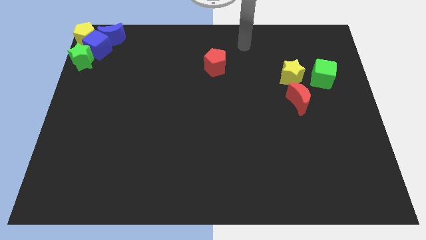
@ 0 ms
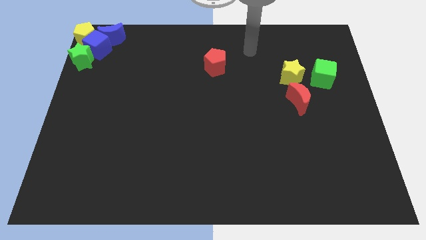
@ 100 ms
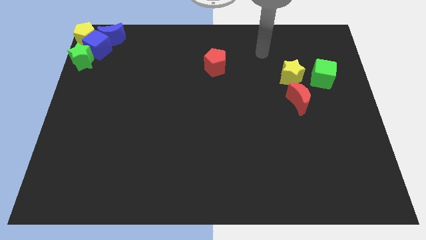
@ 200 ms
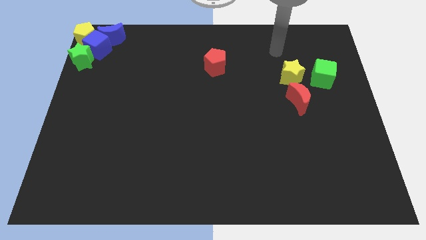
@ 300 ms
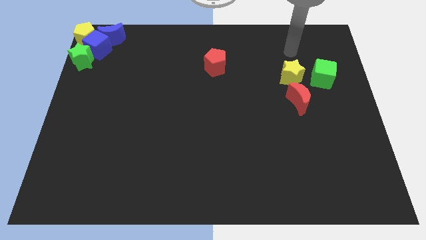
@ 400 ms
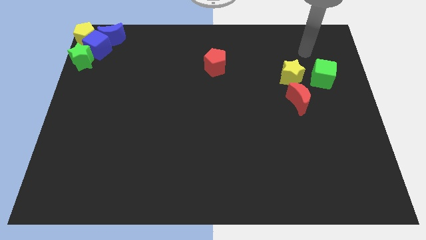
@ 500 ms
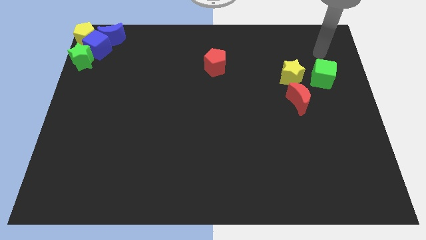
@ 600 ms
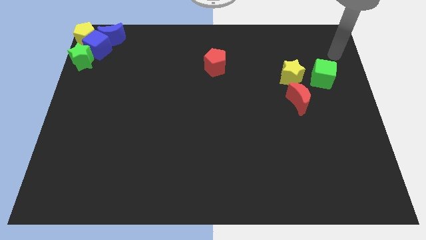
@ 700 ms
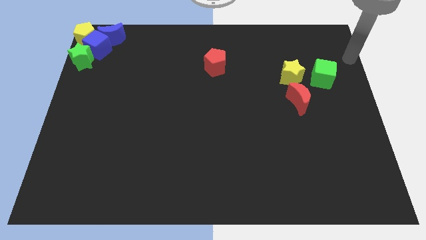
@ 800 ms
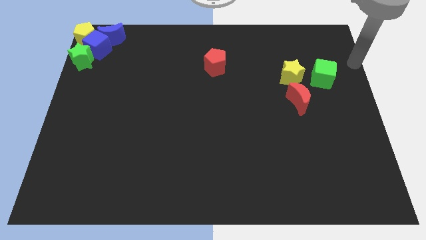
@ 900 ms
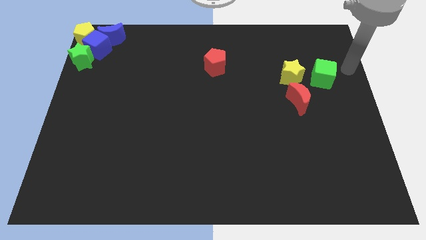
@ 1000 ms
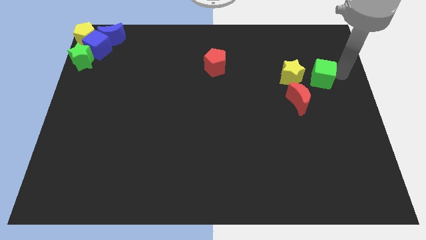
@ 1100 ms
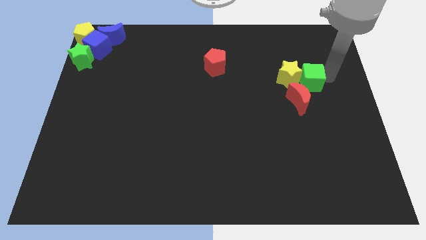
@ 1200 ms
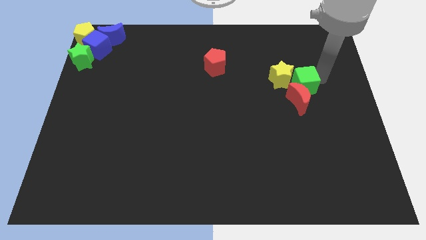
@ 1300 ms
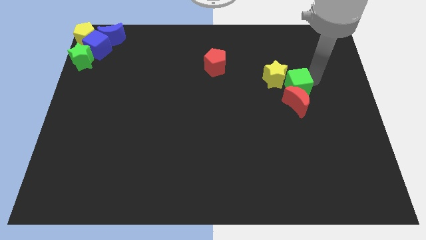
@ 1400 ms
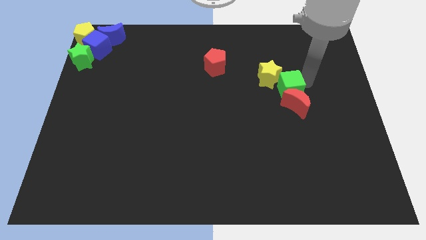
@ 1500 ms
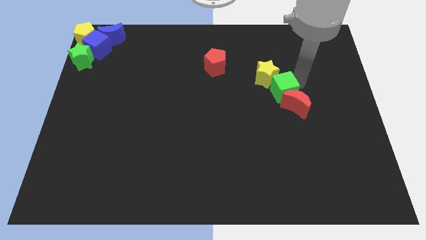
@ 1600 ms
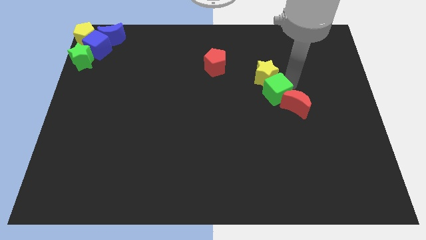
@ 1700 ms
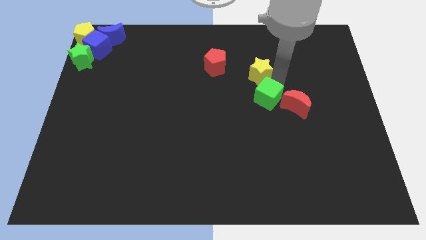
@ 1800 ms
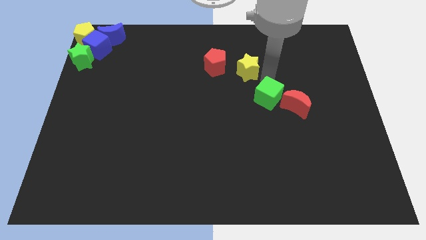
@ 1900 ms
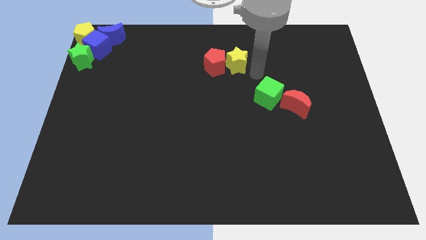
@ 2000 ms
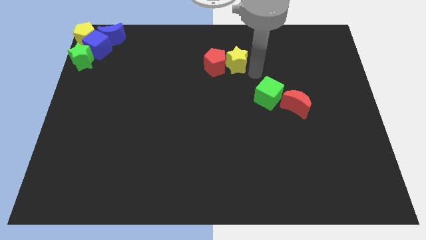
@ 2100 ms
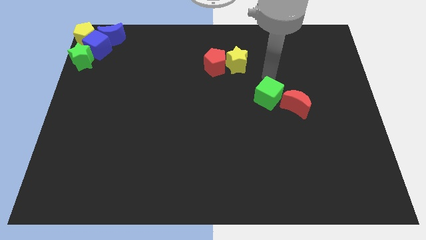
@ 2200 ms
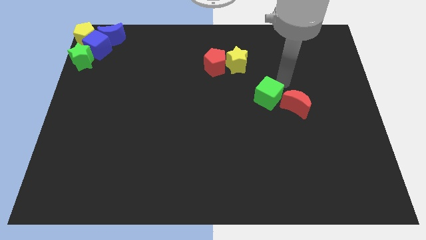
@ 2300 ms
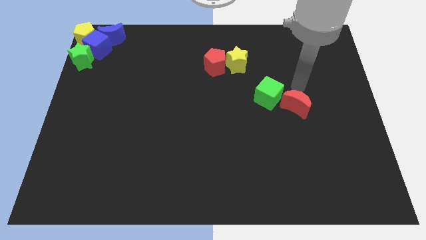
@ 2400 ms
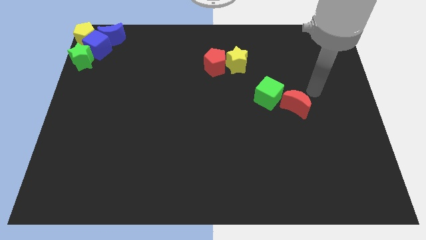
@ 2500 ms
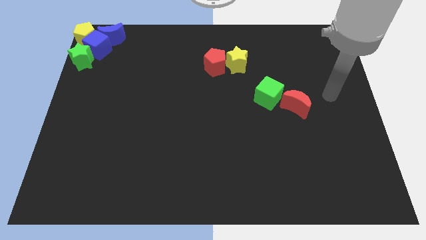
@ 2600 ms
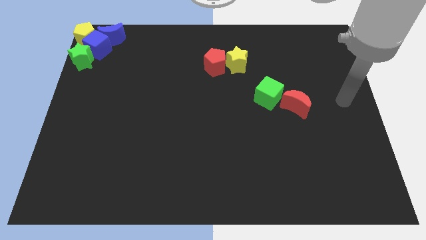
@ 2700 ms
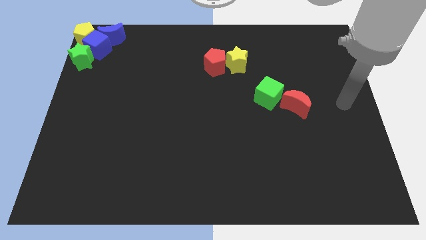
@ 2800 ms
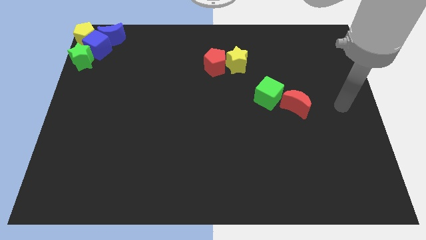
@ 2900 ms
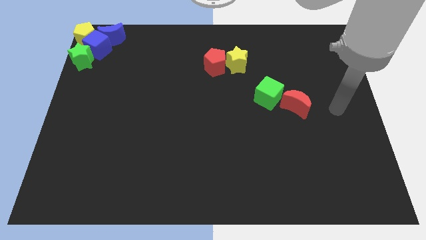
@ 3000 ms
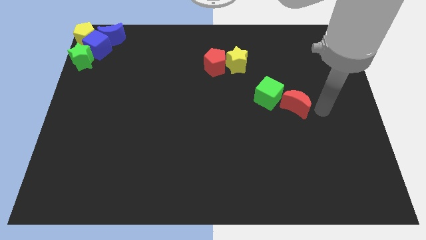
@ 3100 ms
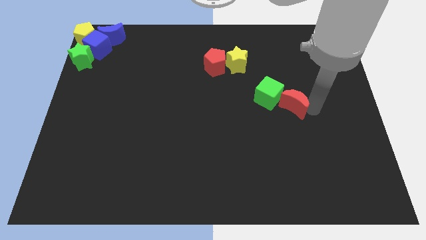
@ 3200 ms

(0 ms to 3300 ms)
separate the yellow star from the green cube and red moon

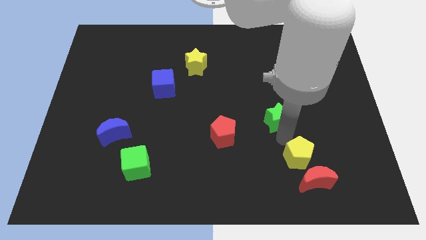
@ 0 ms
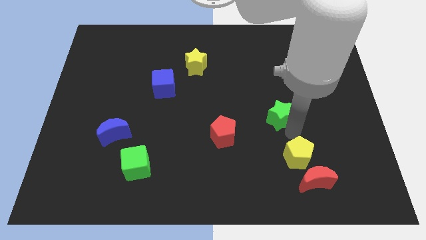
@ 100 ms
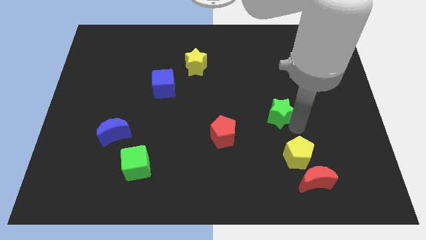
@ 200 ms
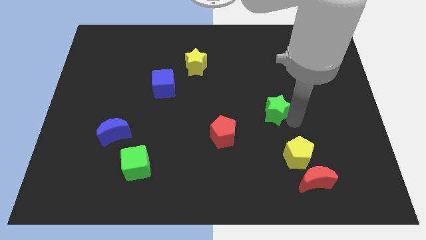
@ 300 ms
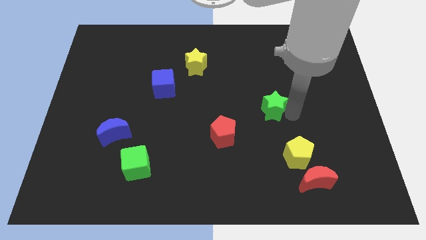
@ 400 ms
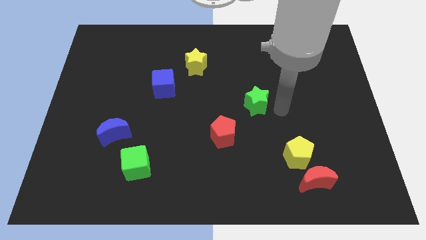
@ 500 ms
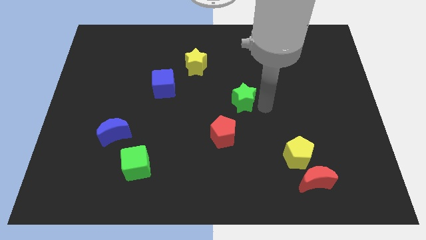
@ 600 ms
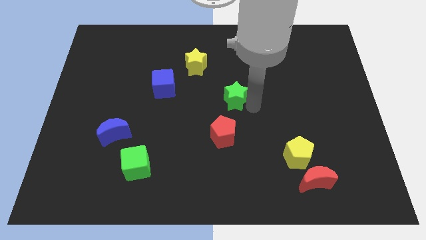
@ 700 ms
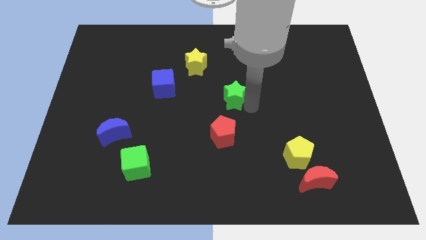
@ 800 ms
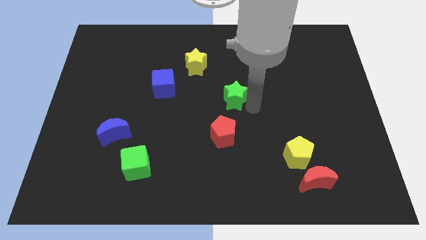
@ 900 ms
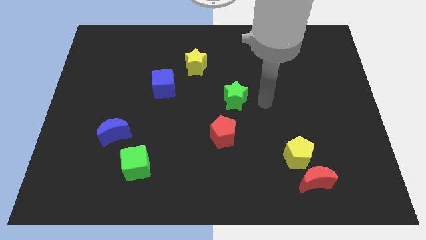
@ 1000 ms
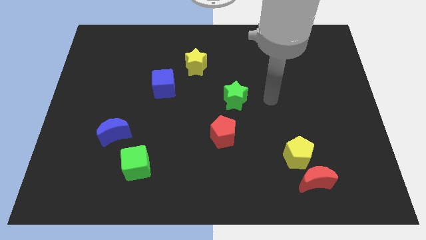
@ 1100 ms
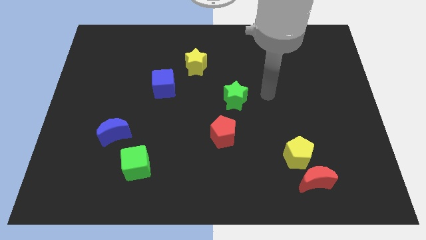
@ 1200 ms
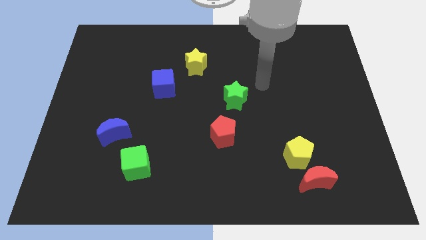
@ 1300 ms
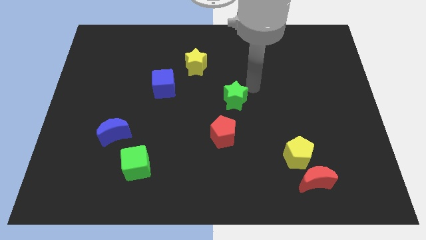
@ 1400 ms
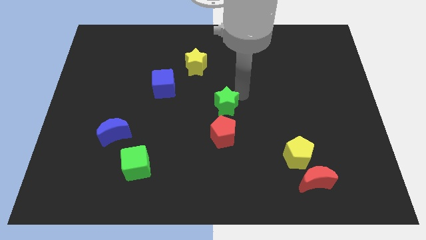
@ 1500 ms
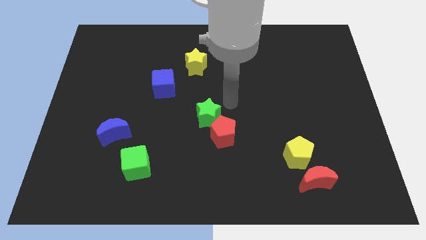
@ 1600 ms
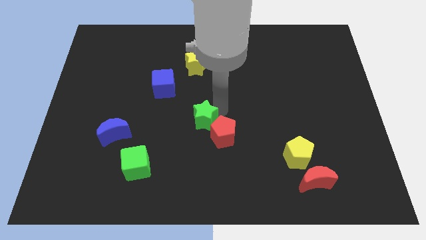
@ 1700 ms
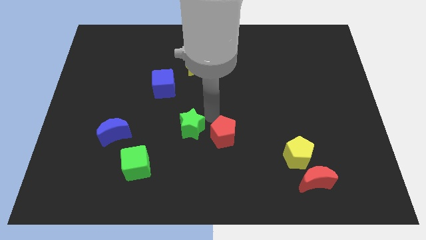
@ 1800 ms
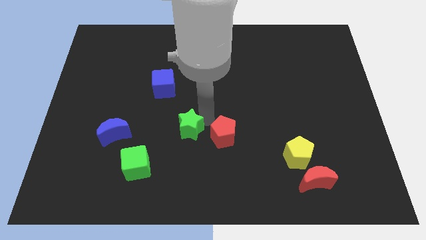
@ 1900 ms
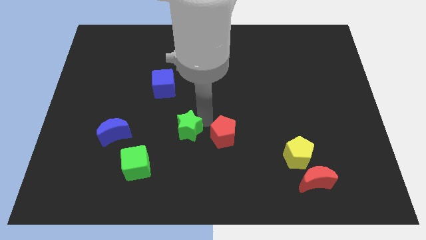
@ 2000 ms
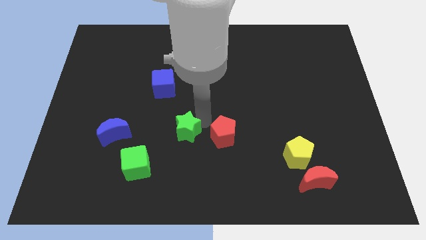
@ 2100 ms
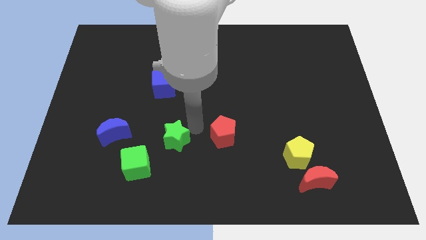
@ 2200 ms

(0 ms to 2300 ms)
place green star to the left of red pentagon

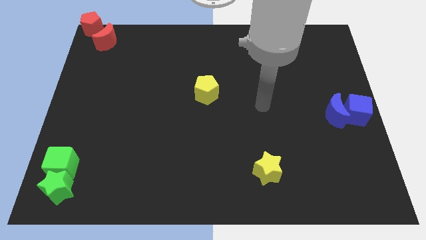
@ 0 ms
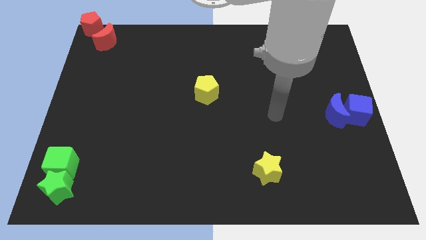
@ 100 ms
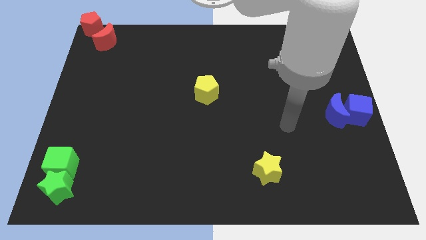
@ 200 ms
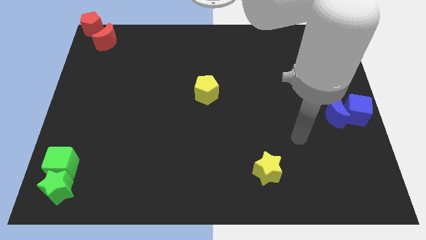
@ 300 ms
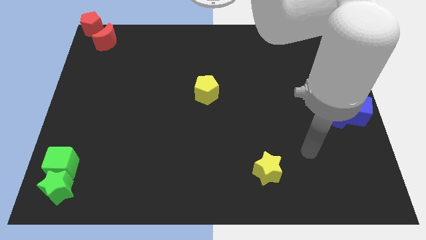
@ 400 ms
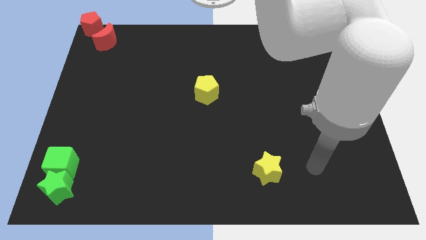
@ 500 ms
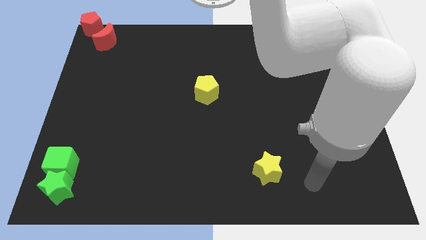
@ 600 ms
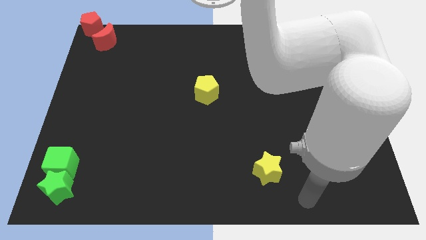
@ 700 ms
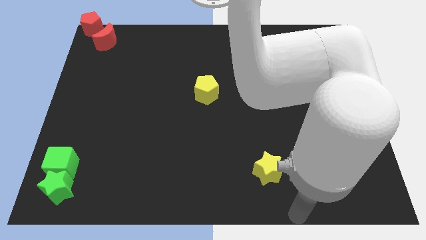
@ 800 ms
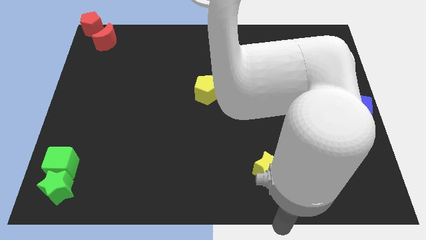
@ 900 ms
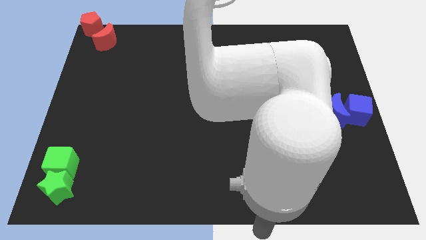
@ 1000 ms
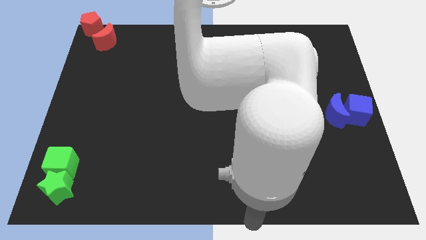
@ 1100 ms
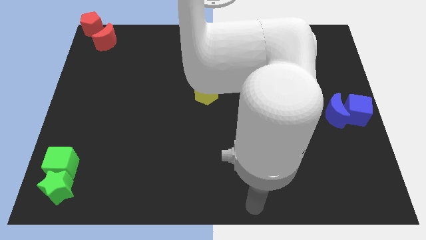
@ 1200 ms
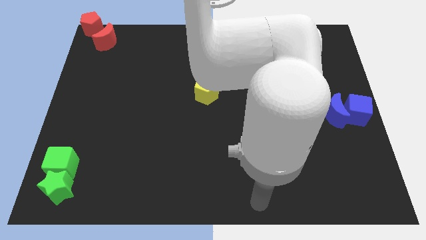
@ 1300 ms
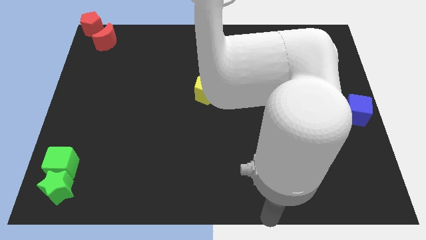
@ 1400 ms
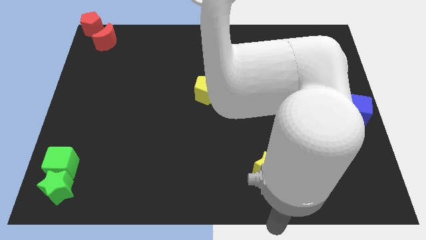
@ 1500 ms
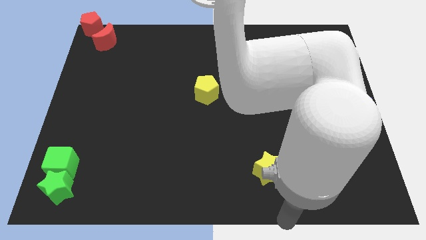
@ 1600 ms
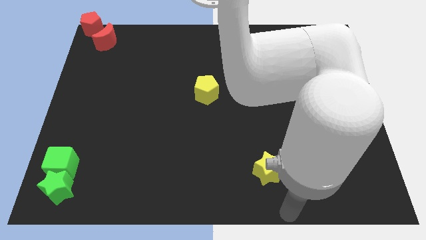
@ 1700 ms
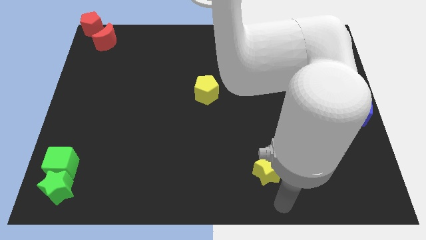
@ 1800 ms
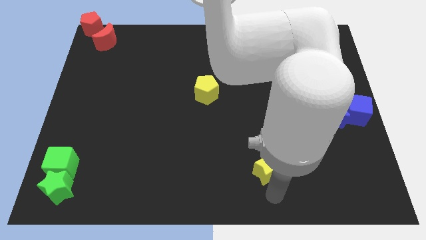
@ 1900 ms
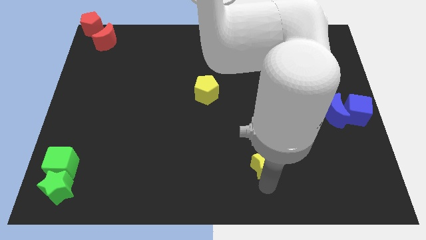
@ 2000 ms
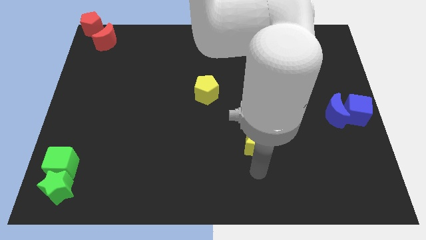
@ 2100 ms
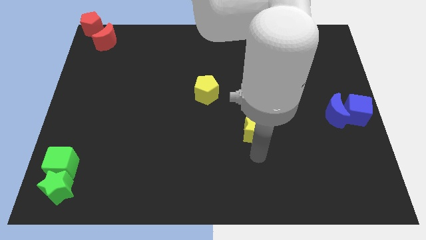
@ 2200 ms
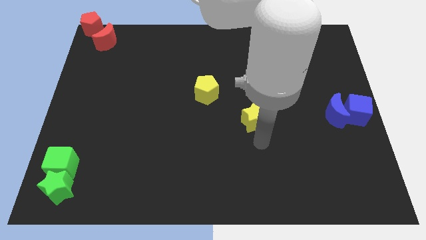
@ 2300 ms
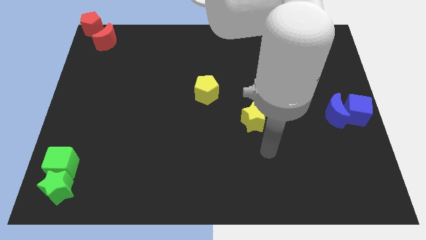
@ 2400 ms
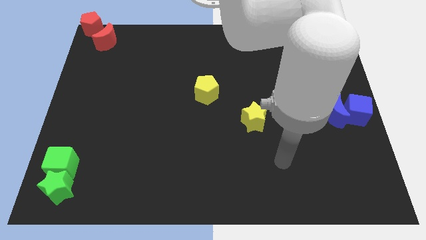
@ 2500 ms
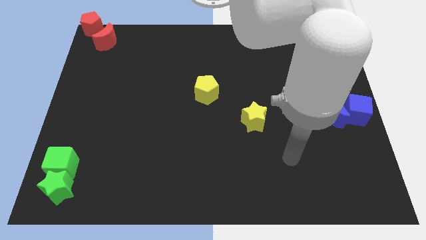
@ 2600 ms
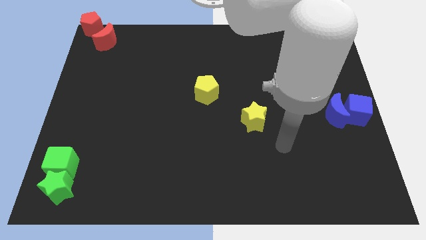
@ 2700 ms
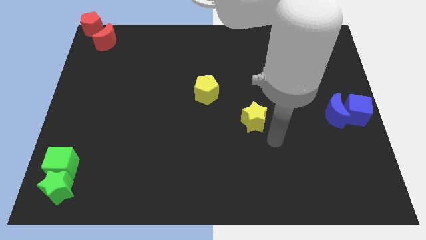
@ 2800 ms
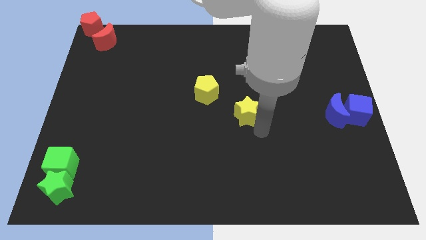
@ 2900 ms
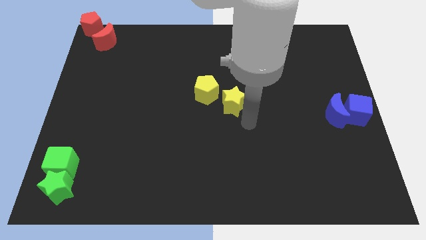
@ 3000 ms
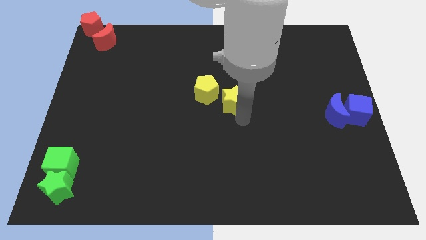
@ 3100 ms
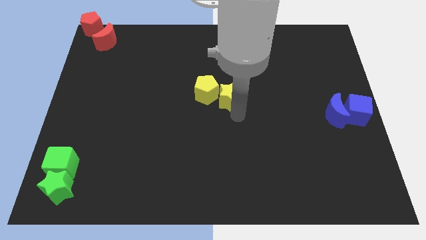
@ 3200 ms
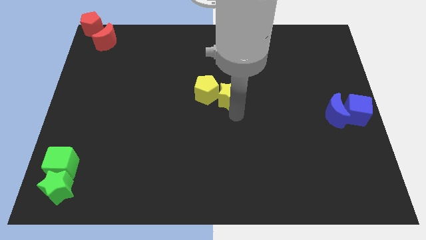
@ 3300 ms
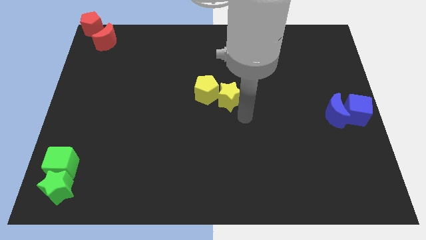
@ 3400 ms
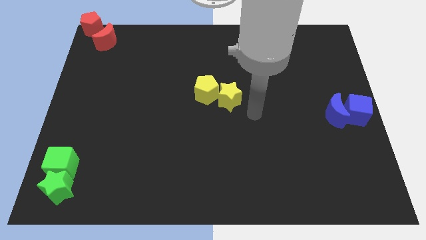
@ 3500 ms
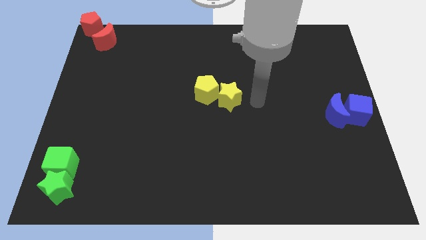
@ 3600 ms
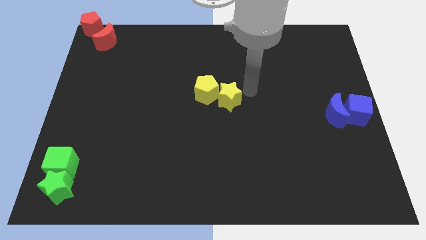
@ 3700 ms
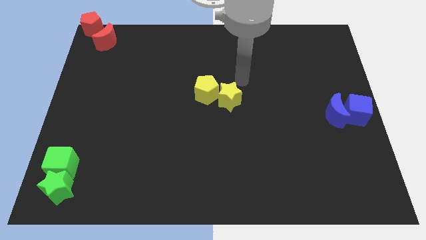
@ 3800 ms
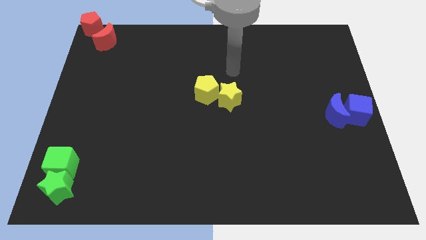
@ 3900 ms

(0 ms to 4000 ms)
push the yellow star to the bottom right side of the yellow pentagon
